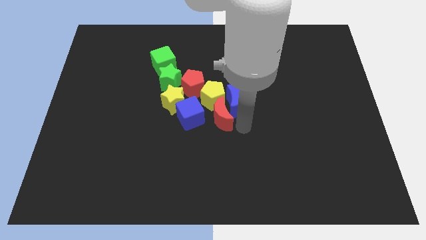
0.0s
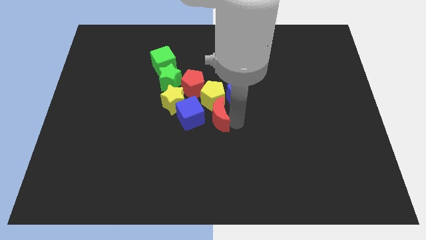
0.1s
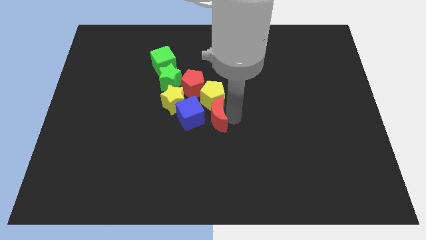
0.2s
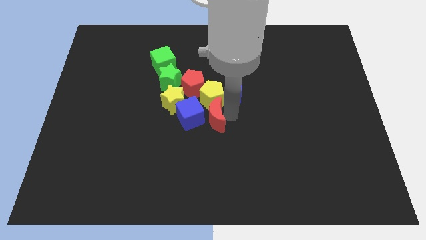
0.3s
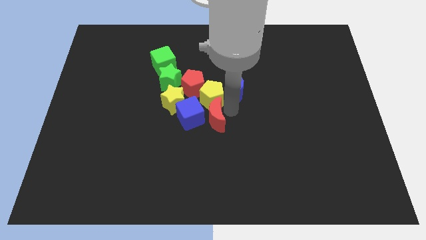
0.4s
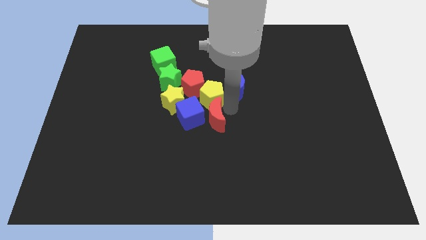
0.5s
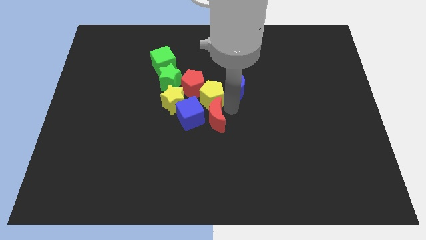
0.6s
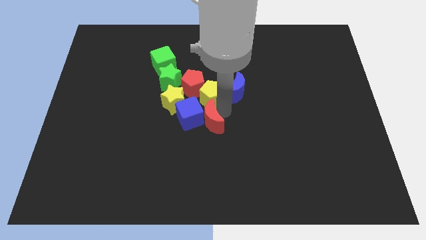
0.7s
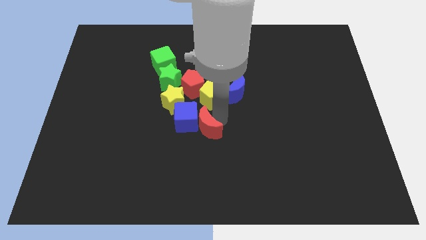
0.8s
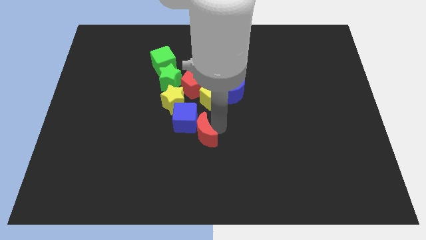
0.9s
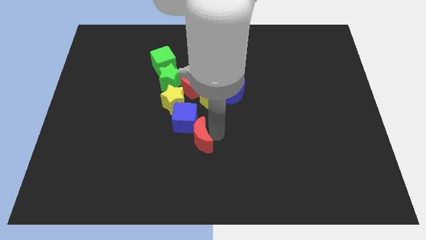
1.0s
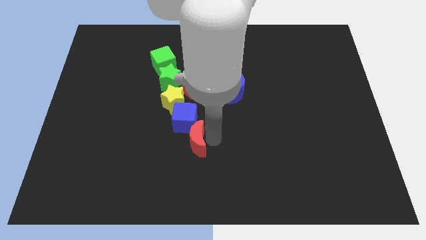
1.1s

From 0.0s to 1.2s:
push the red crescent slightly to the bottom

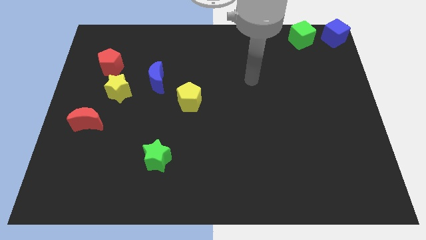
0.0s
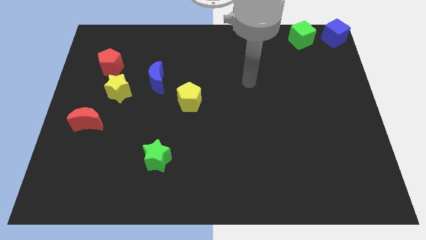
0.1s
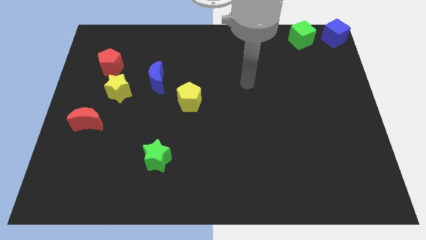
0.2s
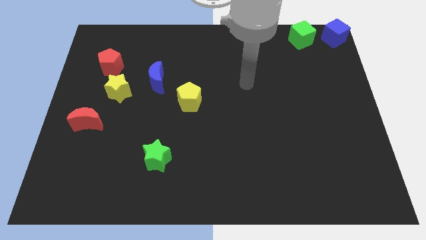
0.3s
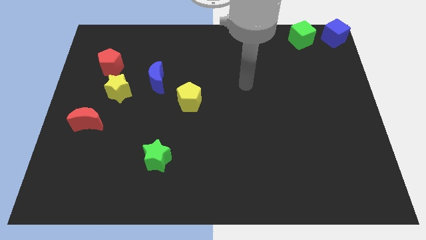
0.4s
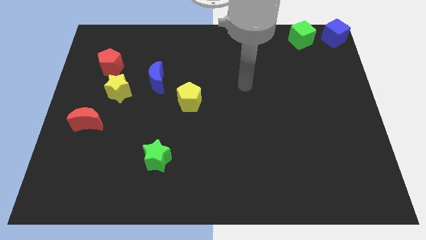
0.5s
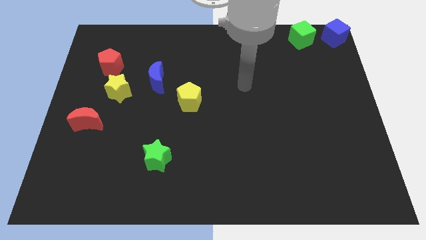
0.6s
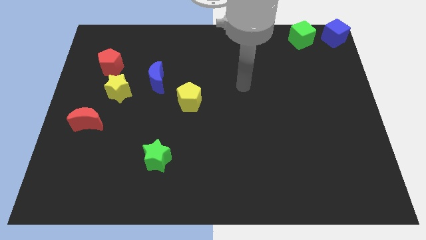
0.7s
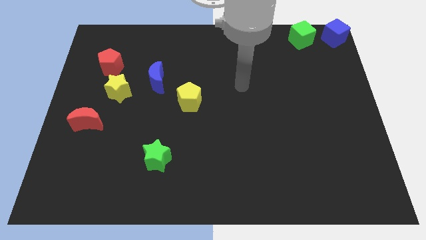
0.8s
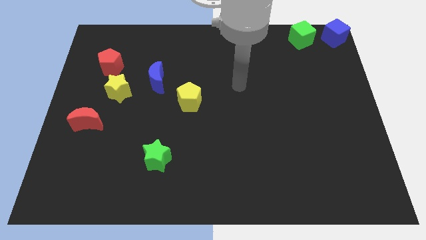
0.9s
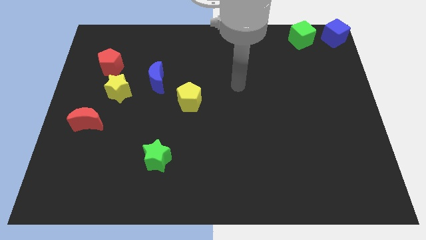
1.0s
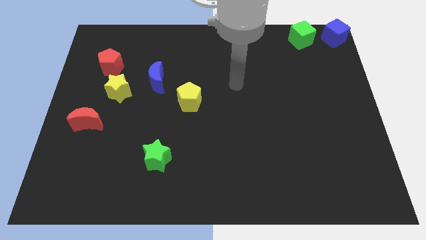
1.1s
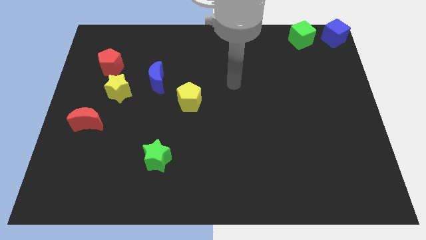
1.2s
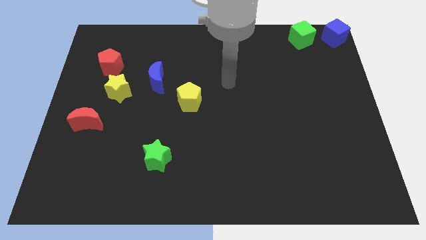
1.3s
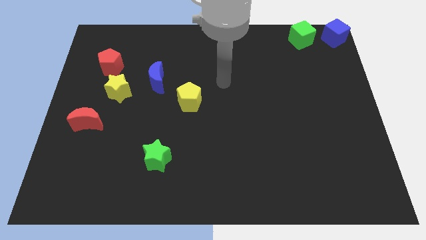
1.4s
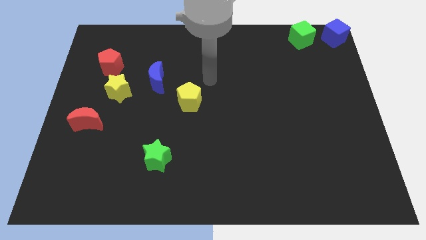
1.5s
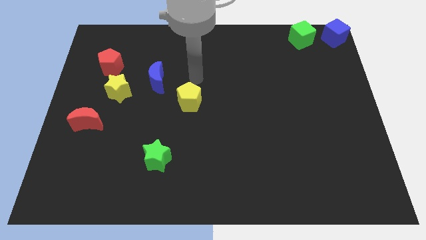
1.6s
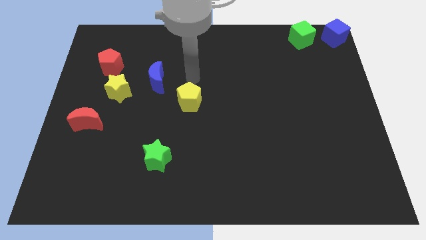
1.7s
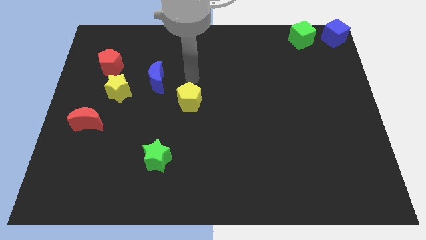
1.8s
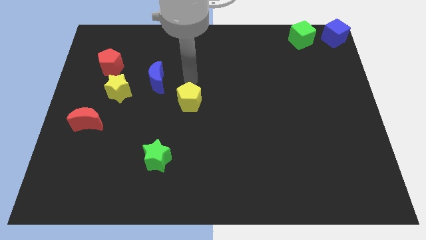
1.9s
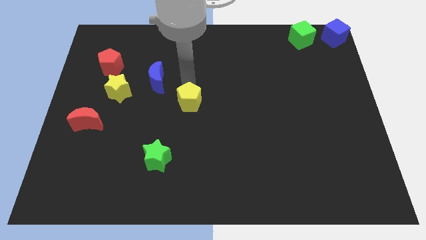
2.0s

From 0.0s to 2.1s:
move your hand towards the yellow pentagon

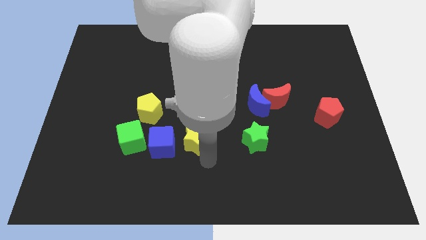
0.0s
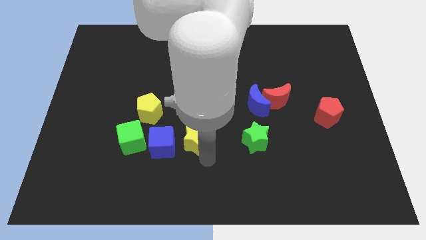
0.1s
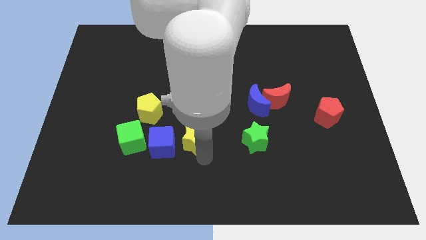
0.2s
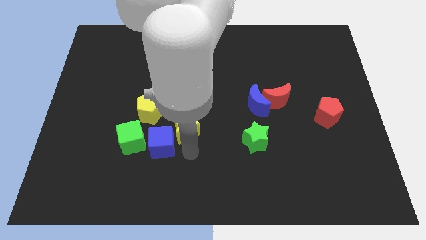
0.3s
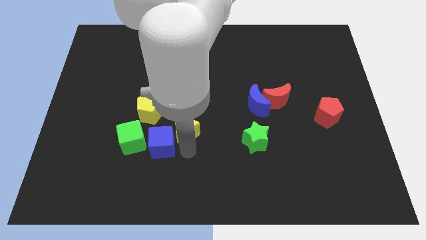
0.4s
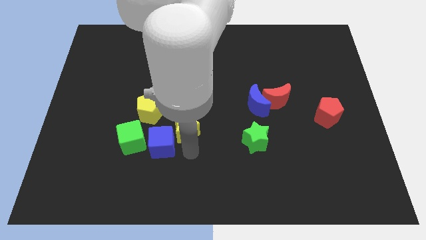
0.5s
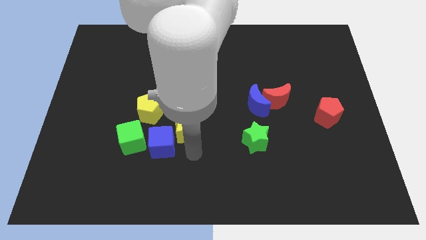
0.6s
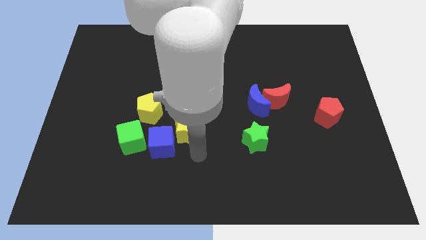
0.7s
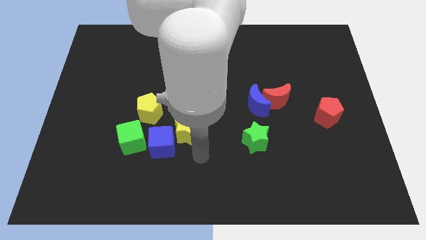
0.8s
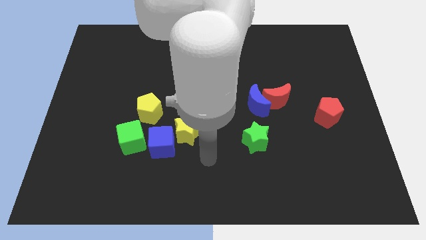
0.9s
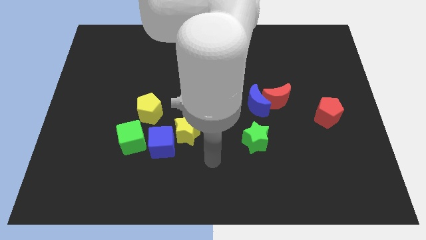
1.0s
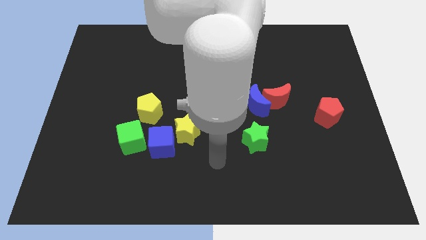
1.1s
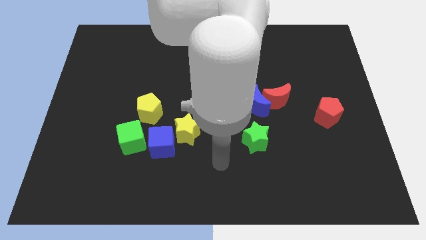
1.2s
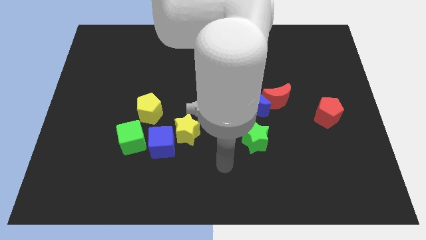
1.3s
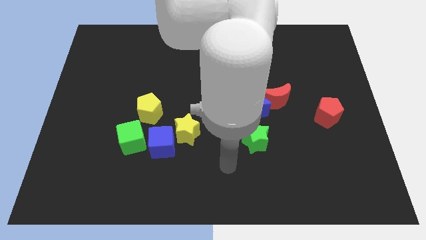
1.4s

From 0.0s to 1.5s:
place the yellow star diagonally to yellow pentagon

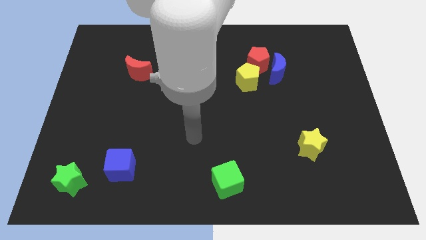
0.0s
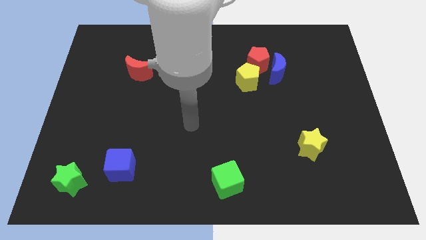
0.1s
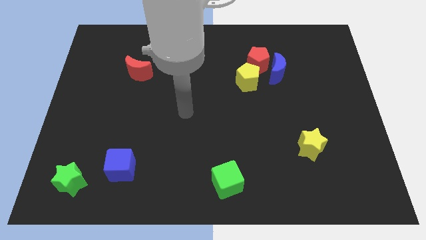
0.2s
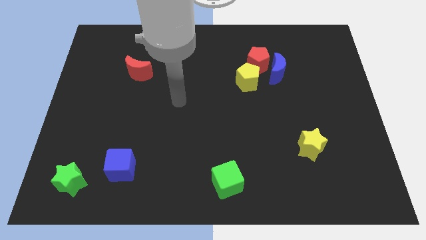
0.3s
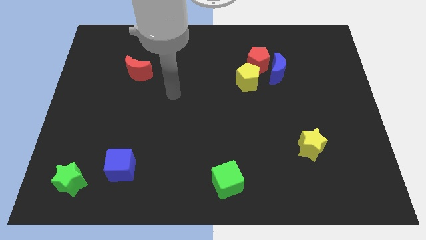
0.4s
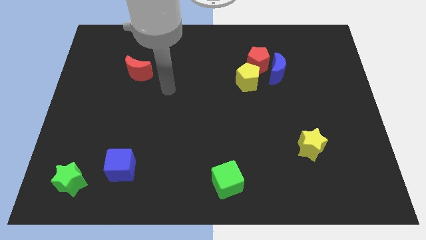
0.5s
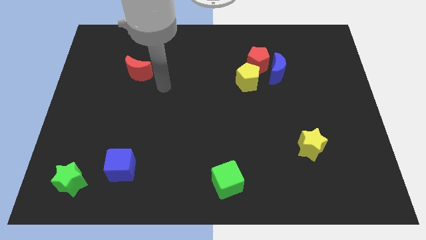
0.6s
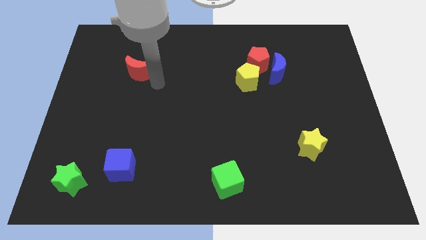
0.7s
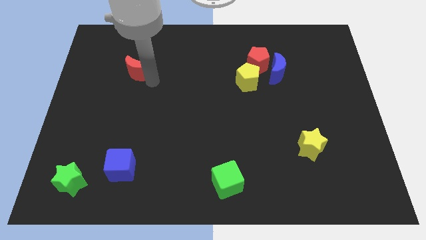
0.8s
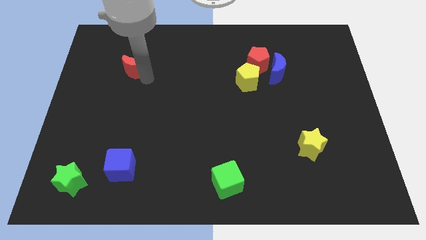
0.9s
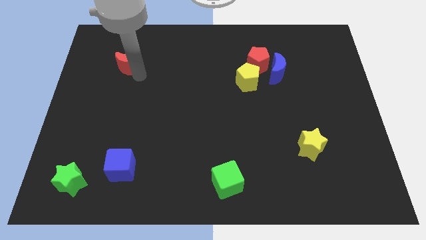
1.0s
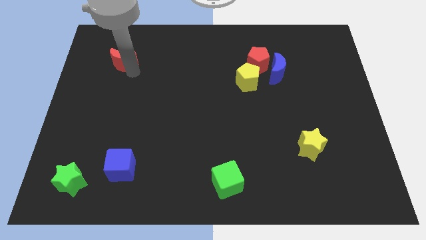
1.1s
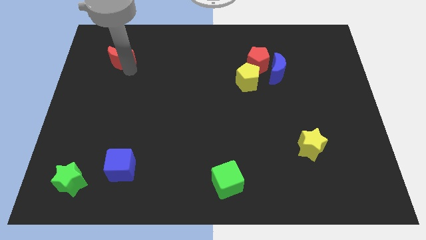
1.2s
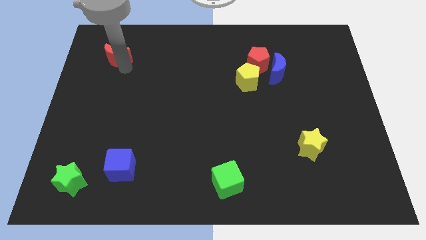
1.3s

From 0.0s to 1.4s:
drag the red moon slightly upwards

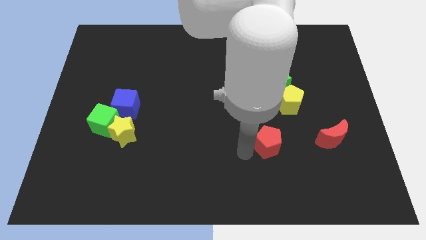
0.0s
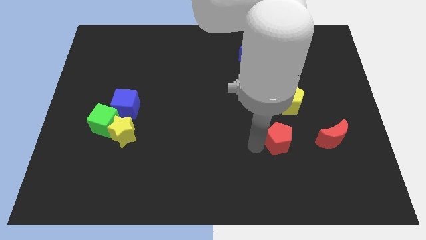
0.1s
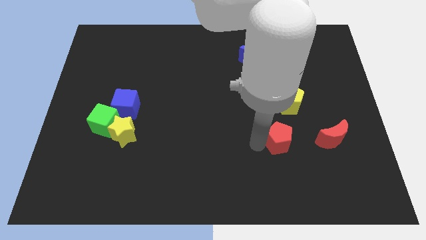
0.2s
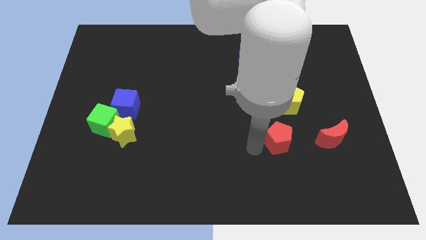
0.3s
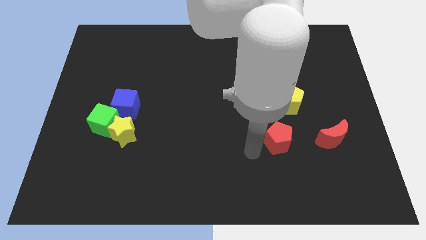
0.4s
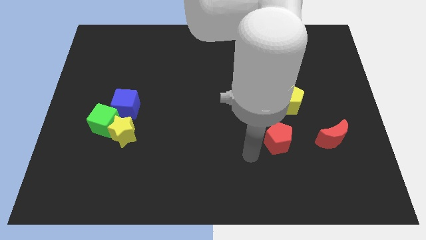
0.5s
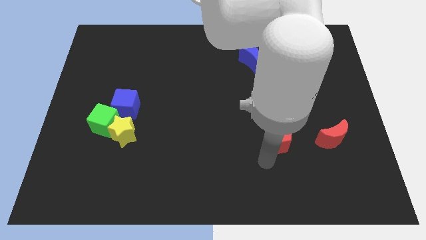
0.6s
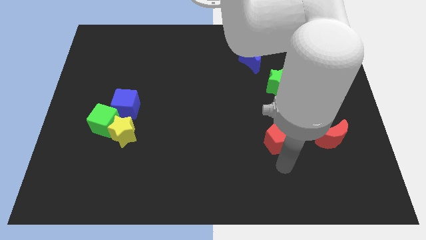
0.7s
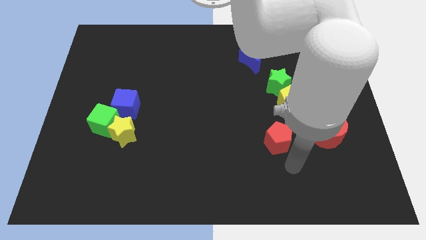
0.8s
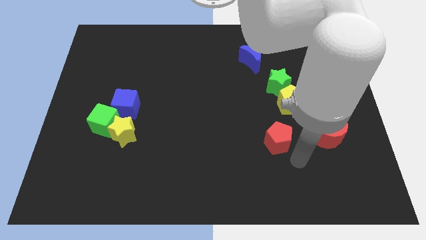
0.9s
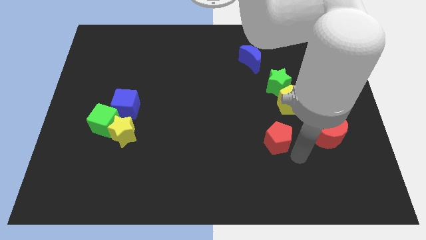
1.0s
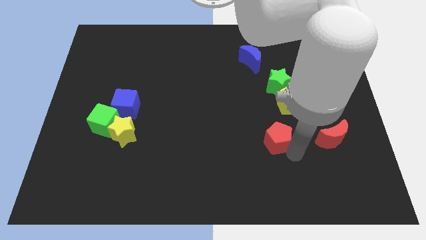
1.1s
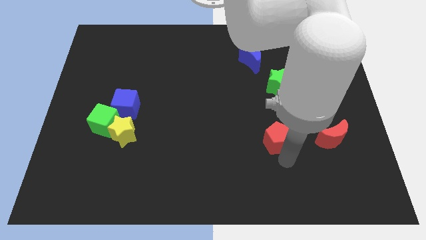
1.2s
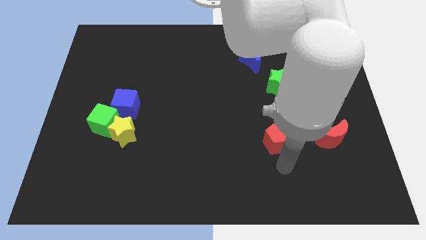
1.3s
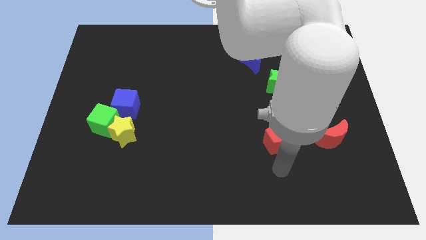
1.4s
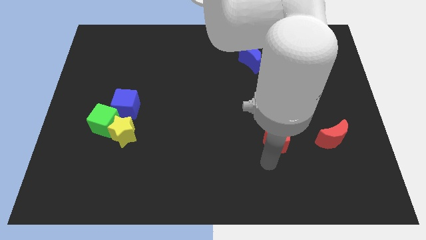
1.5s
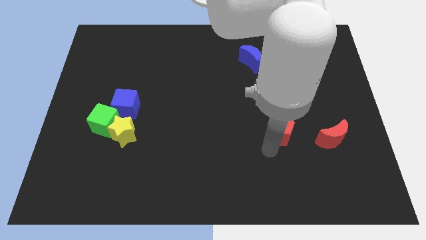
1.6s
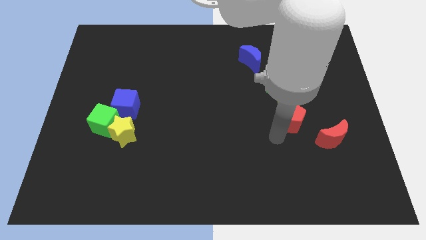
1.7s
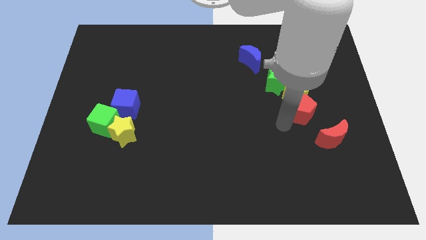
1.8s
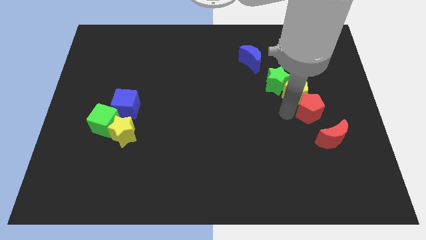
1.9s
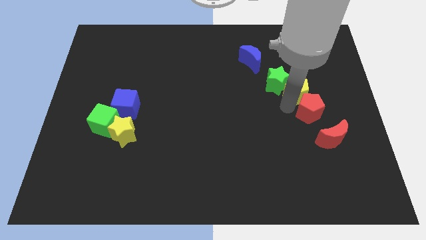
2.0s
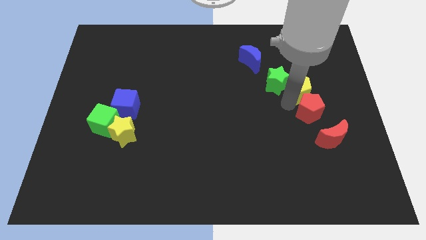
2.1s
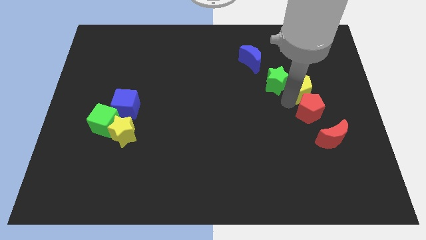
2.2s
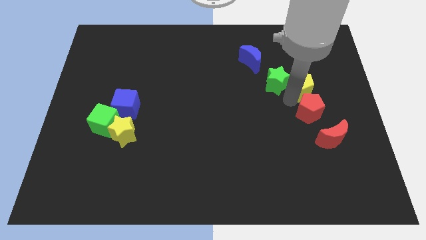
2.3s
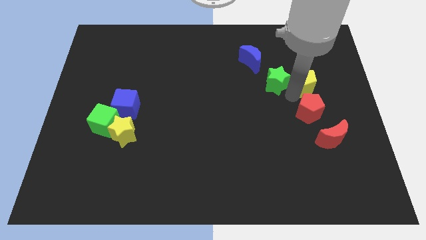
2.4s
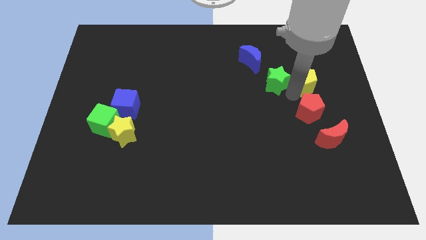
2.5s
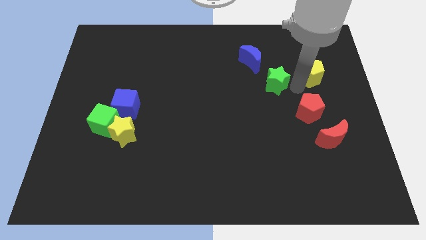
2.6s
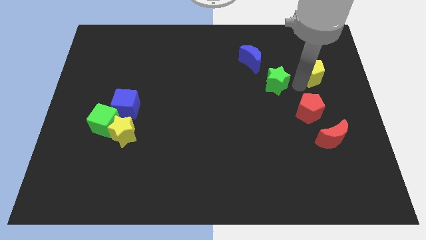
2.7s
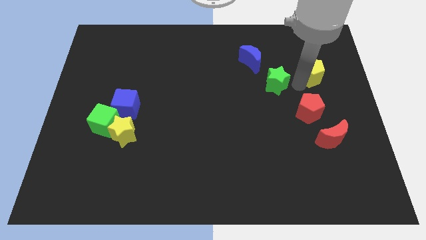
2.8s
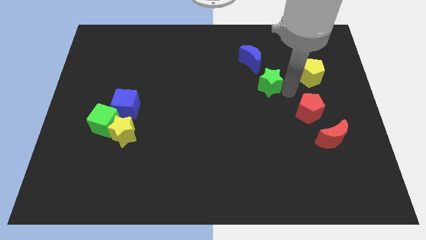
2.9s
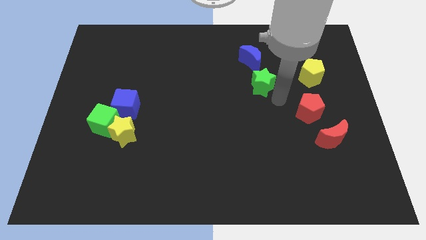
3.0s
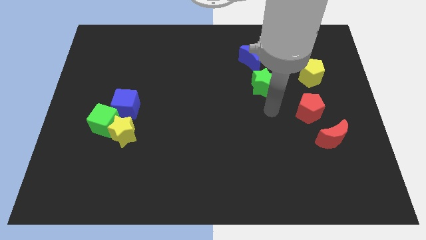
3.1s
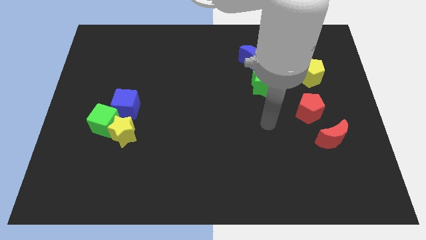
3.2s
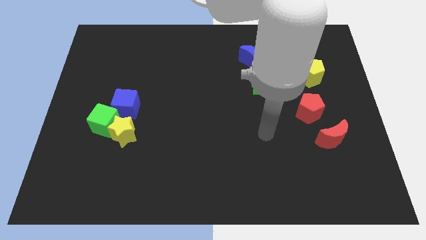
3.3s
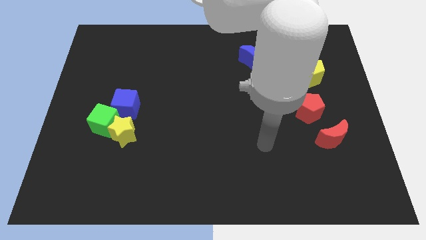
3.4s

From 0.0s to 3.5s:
place the yellow pentagon above the red pentagon
